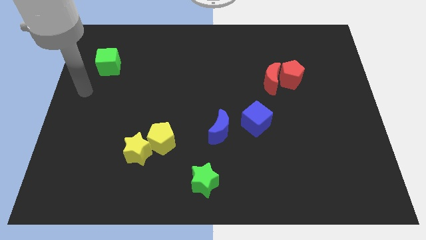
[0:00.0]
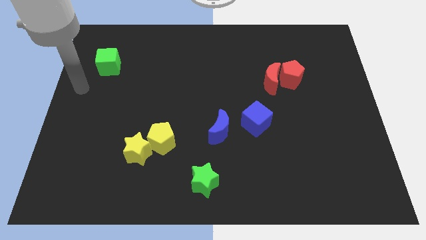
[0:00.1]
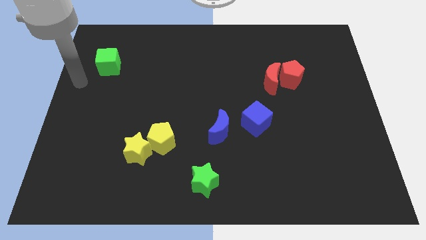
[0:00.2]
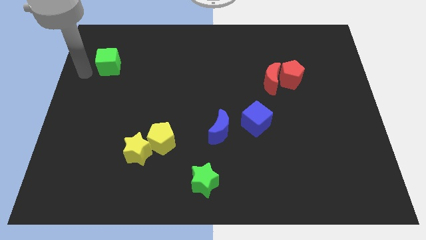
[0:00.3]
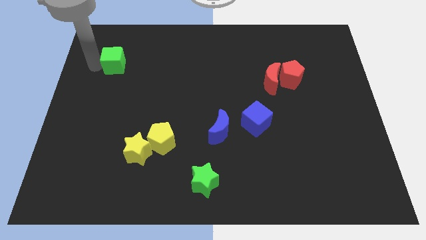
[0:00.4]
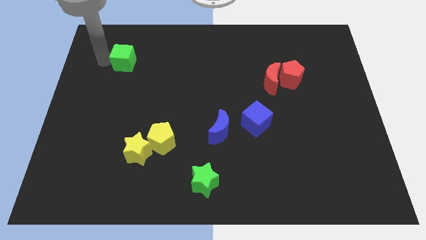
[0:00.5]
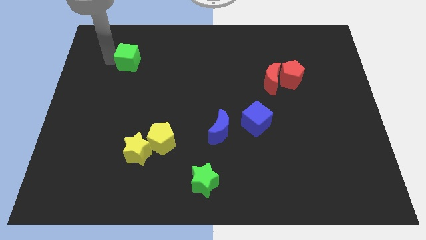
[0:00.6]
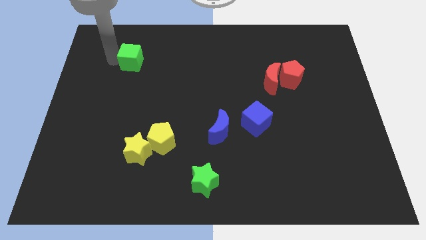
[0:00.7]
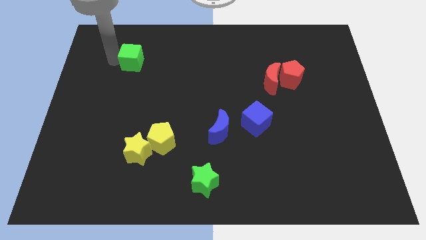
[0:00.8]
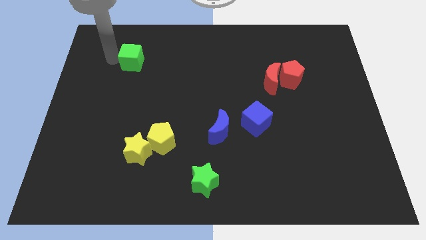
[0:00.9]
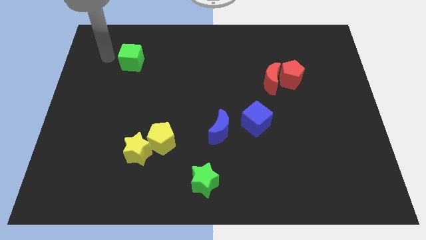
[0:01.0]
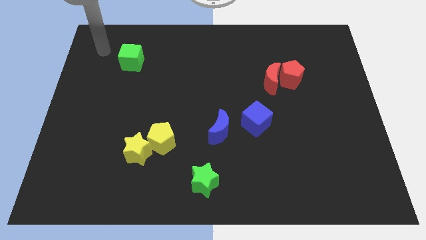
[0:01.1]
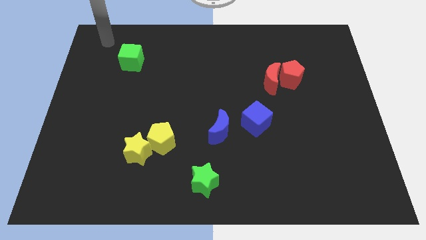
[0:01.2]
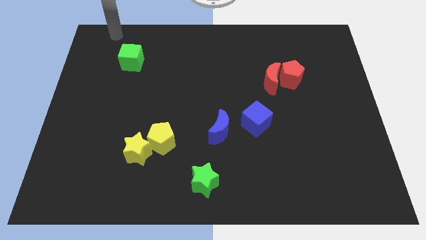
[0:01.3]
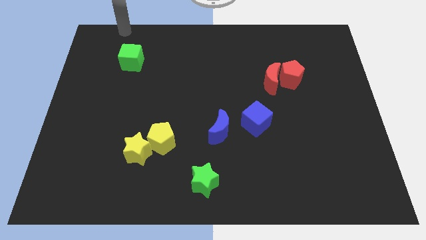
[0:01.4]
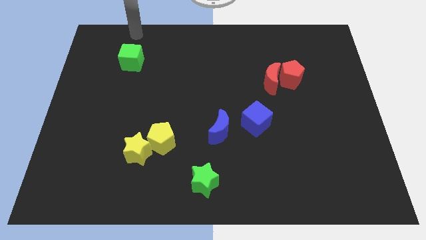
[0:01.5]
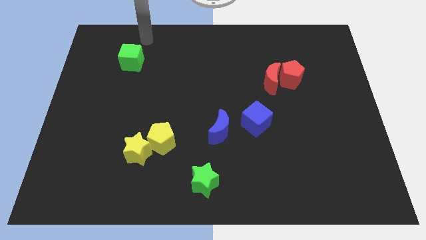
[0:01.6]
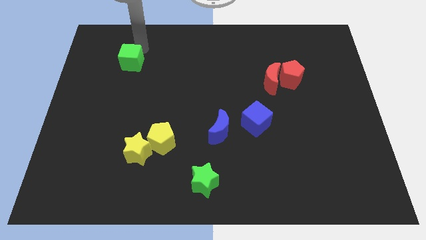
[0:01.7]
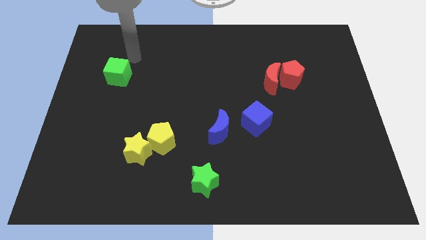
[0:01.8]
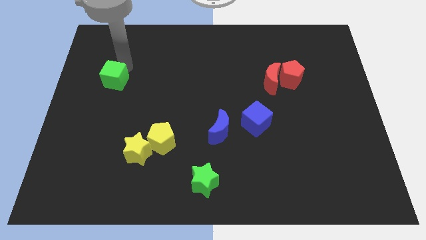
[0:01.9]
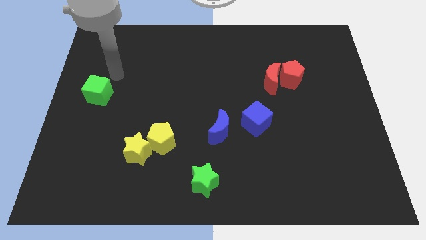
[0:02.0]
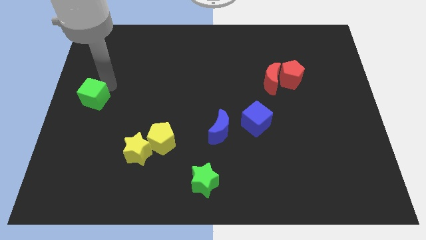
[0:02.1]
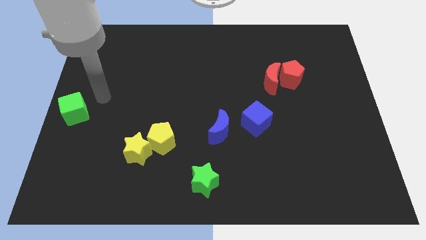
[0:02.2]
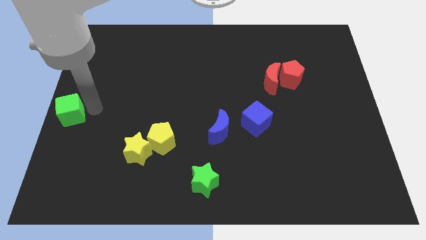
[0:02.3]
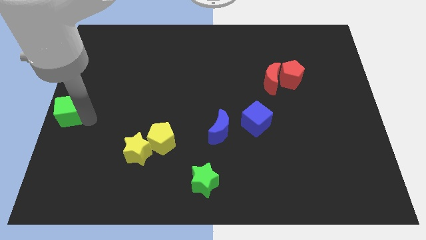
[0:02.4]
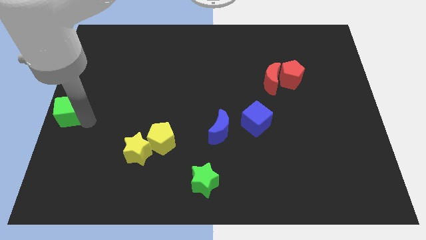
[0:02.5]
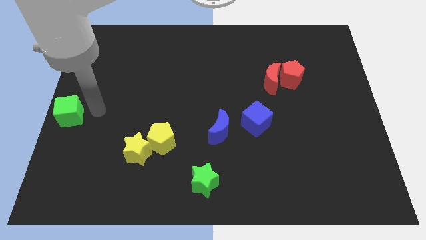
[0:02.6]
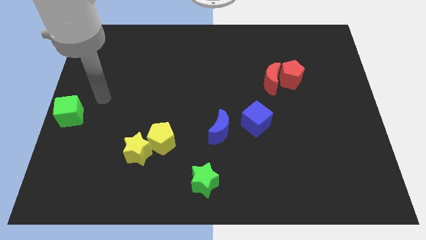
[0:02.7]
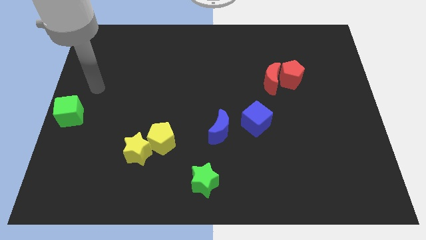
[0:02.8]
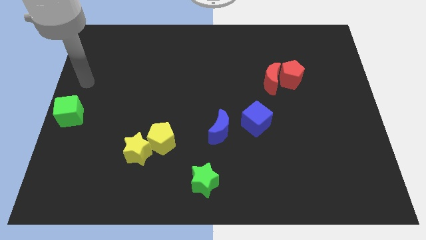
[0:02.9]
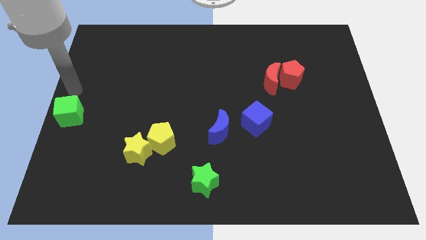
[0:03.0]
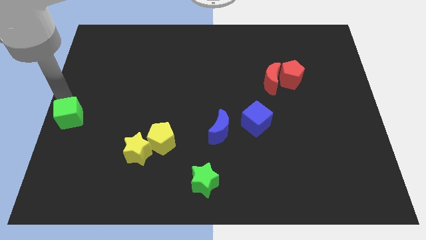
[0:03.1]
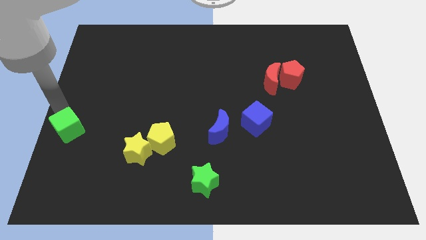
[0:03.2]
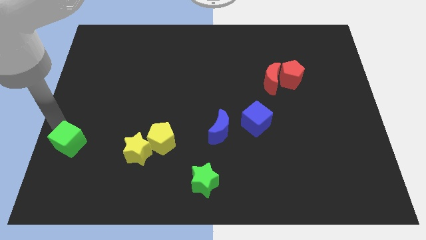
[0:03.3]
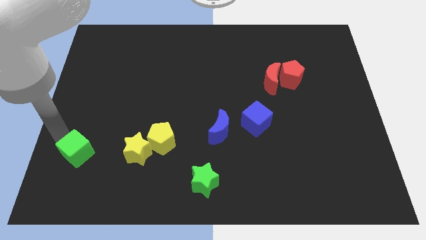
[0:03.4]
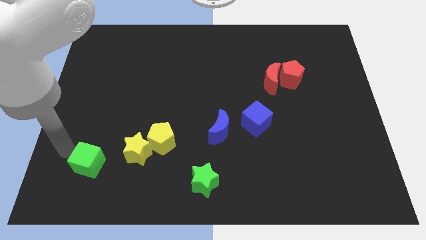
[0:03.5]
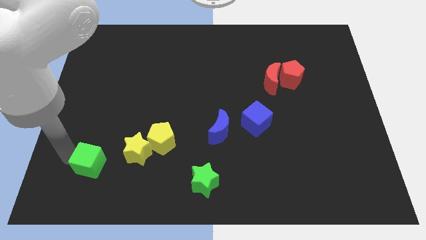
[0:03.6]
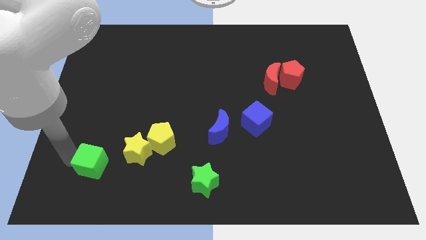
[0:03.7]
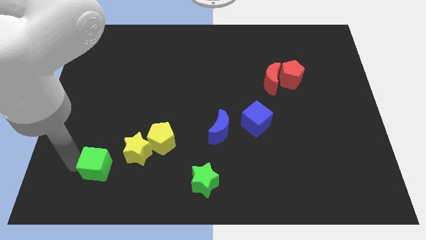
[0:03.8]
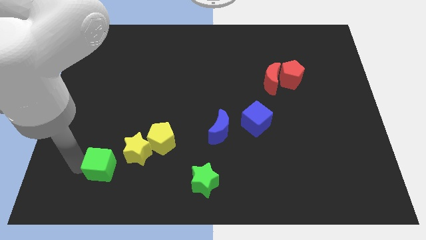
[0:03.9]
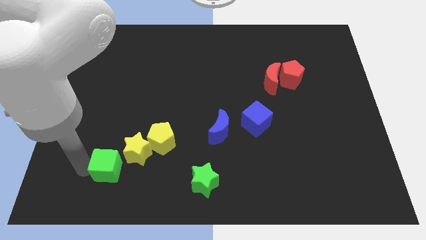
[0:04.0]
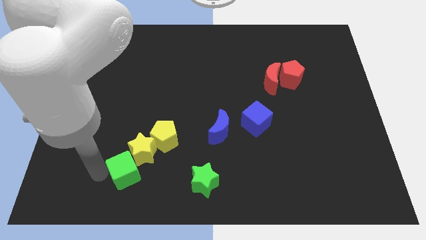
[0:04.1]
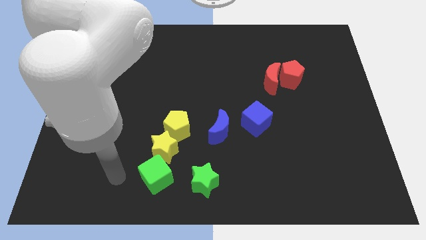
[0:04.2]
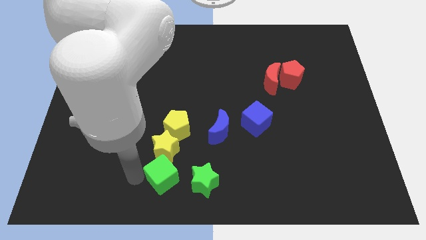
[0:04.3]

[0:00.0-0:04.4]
place green cube below yellow star

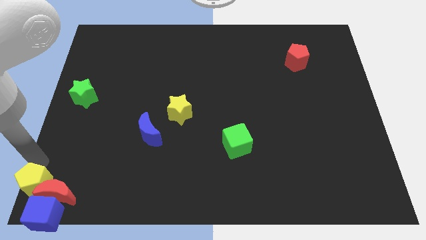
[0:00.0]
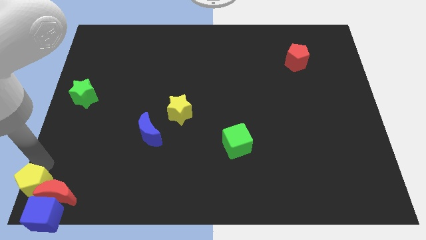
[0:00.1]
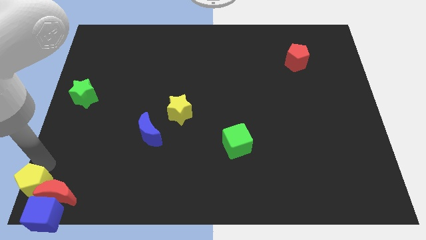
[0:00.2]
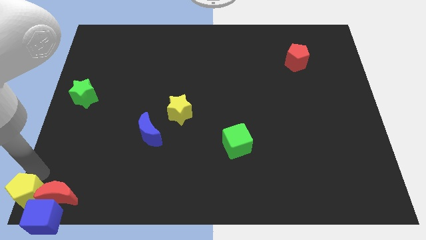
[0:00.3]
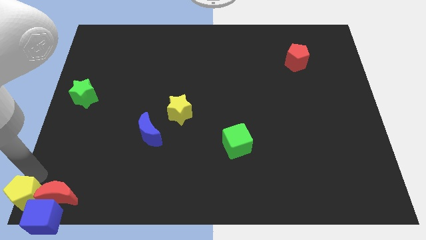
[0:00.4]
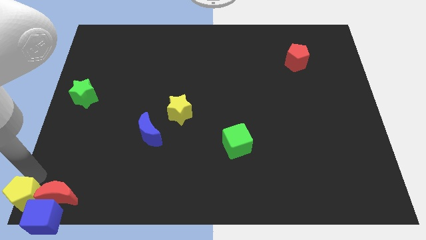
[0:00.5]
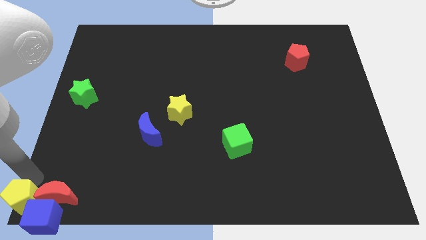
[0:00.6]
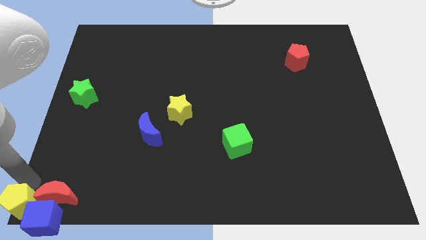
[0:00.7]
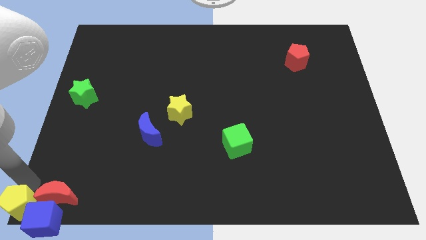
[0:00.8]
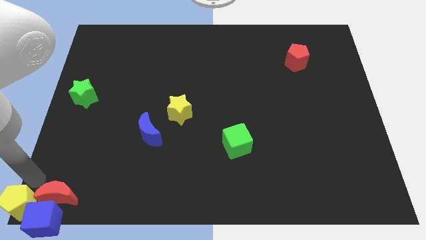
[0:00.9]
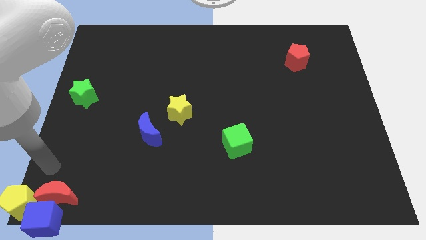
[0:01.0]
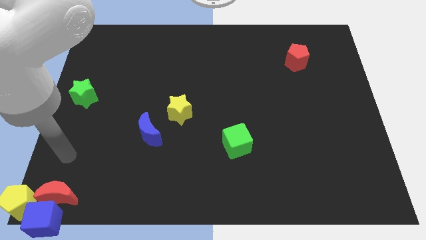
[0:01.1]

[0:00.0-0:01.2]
move the yellow pentagon to the bottom left of the board

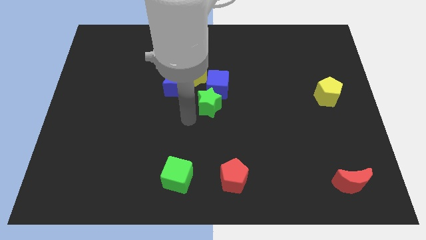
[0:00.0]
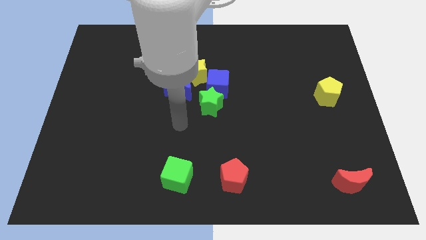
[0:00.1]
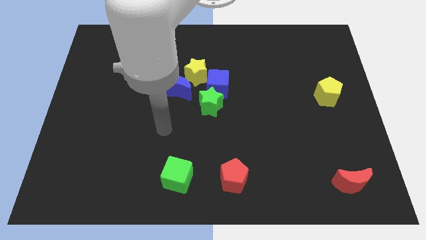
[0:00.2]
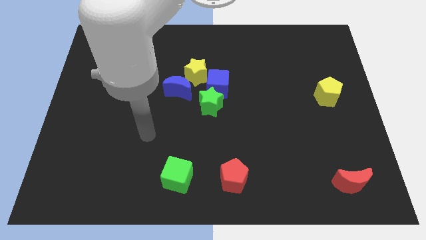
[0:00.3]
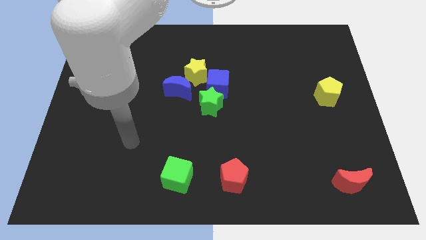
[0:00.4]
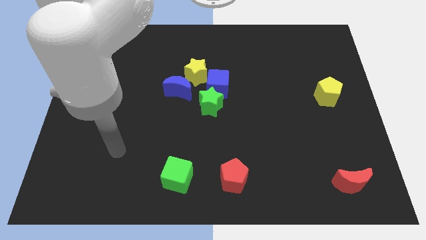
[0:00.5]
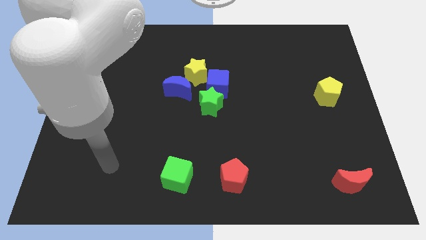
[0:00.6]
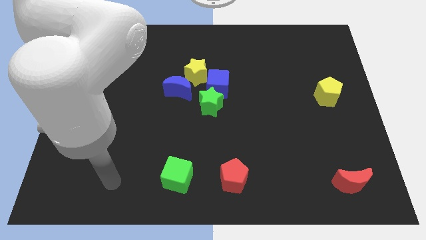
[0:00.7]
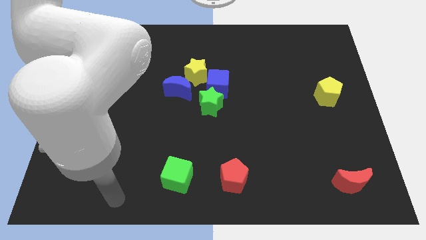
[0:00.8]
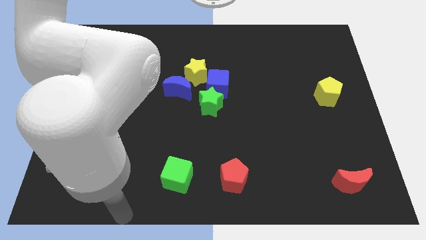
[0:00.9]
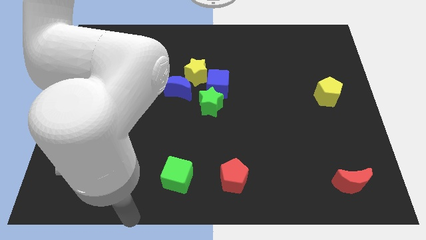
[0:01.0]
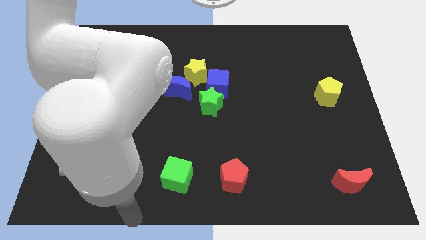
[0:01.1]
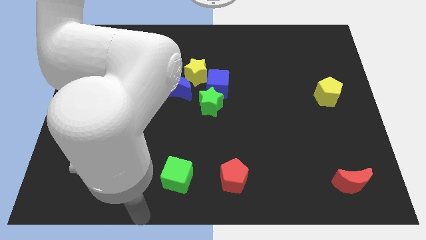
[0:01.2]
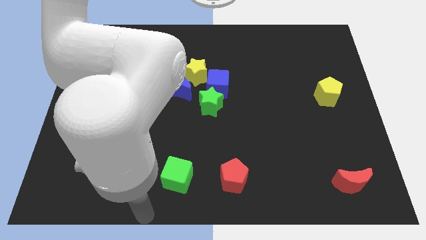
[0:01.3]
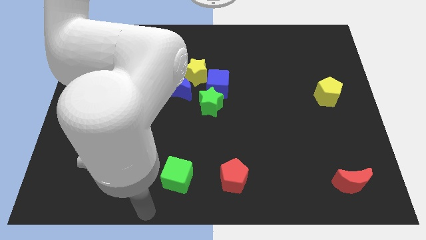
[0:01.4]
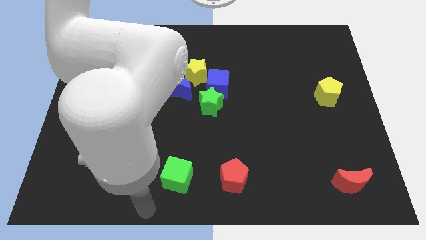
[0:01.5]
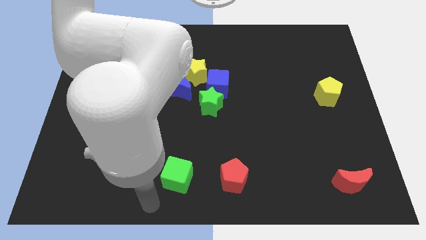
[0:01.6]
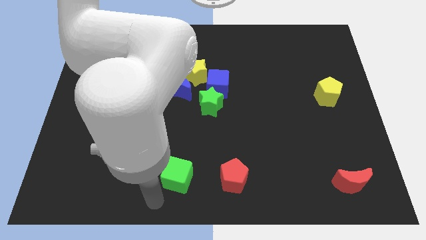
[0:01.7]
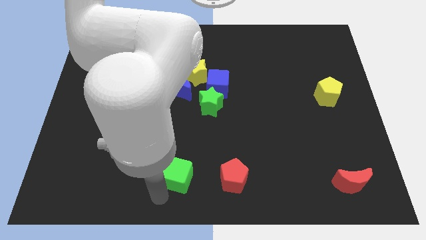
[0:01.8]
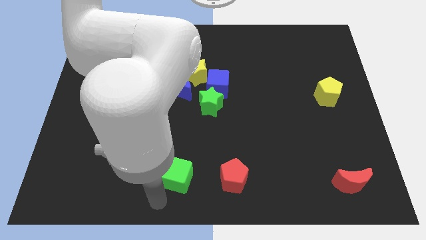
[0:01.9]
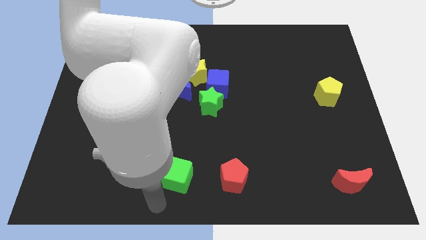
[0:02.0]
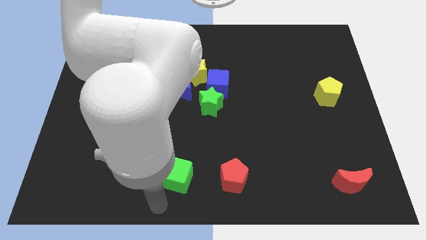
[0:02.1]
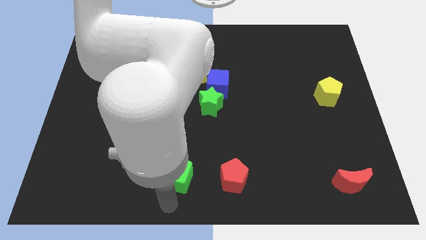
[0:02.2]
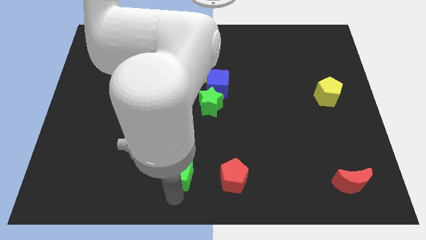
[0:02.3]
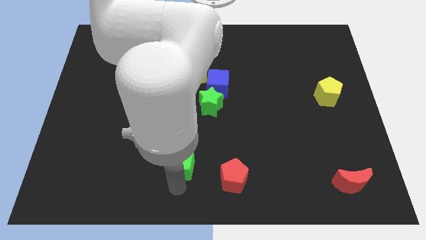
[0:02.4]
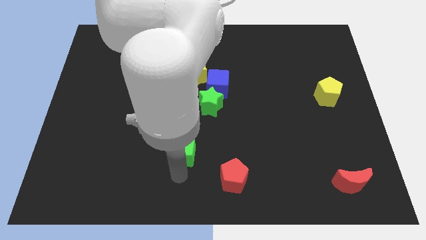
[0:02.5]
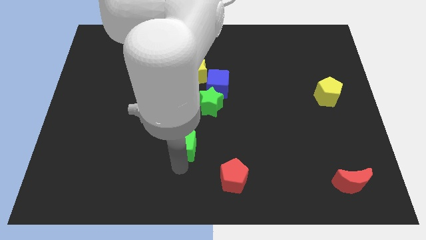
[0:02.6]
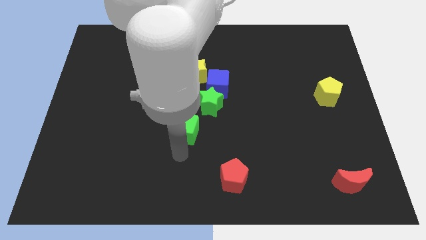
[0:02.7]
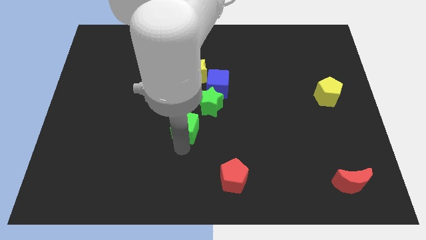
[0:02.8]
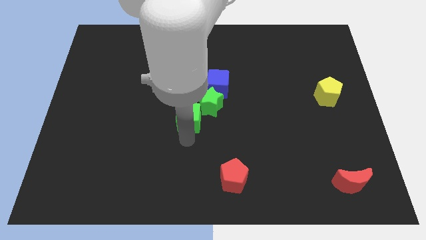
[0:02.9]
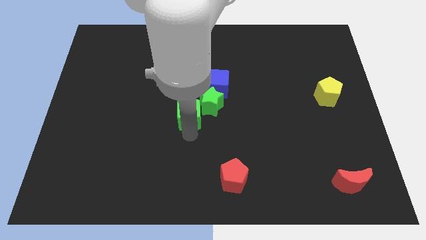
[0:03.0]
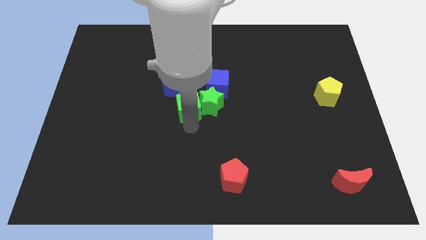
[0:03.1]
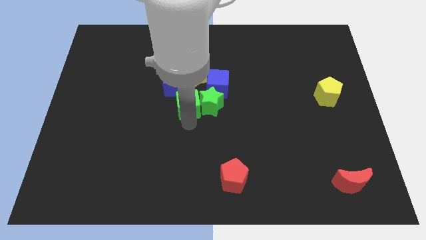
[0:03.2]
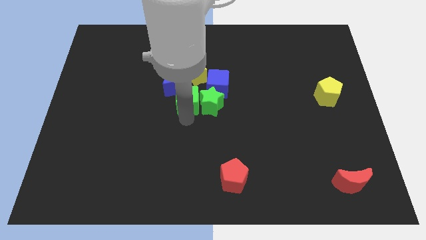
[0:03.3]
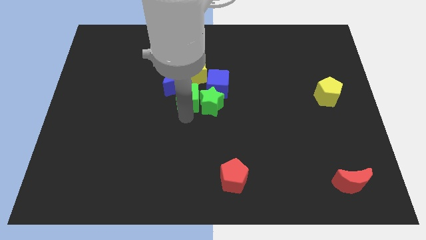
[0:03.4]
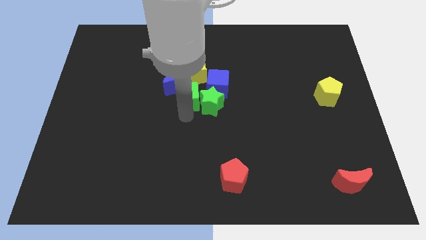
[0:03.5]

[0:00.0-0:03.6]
move the green cube into the group of blocks
